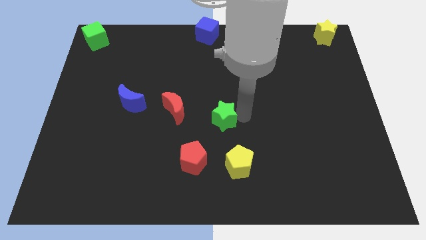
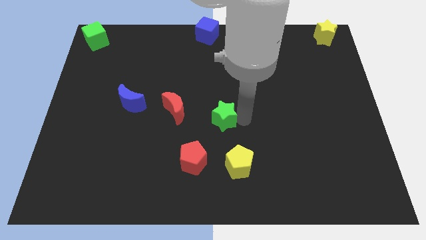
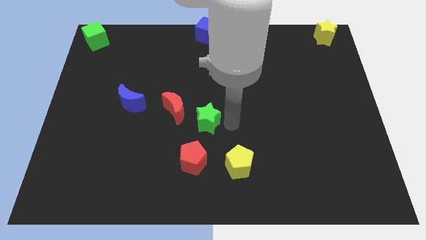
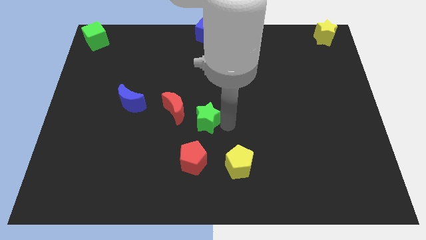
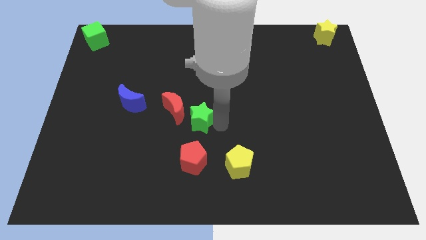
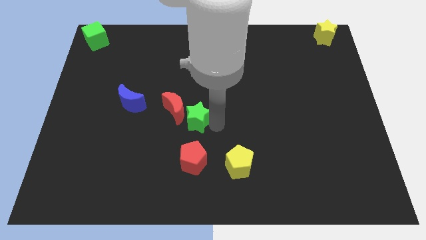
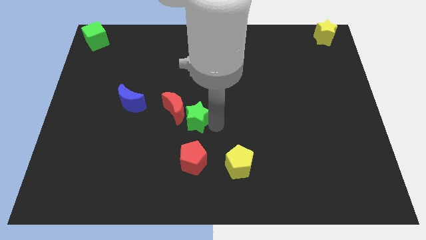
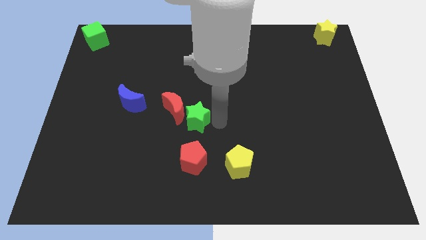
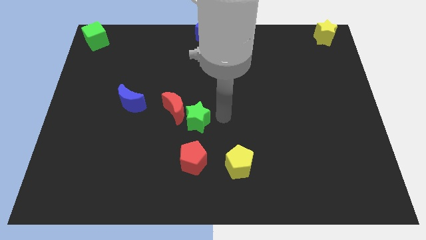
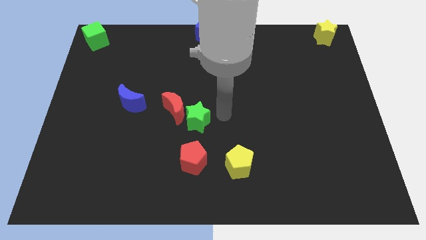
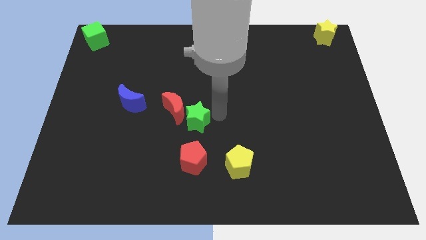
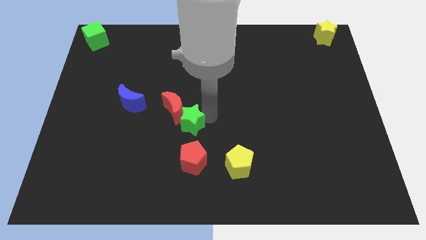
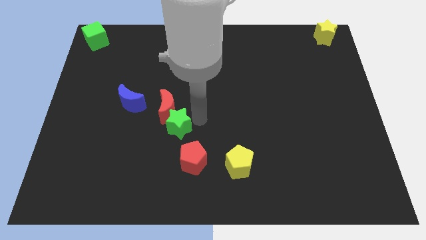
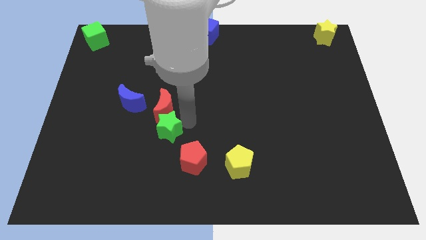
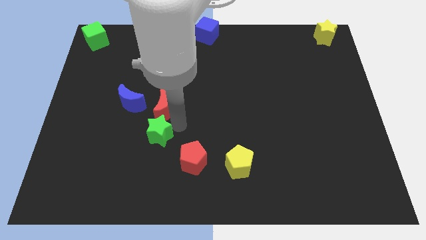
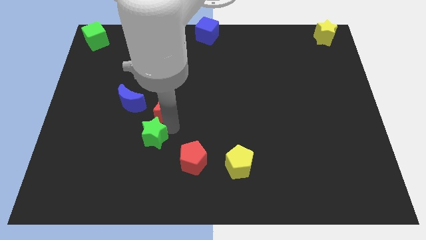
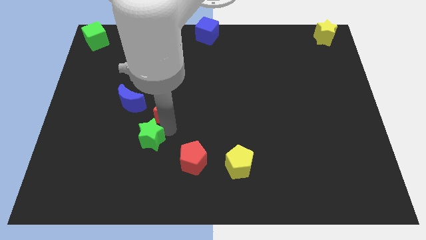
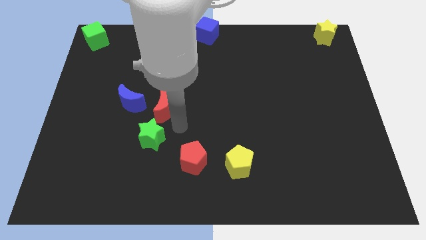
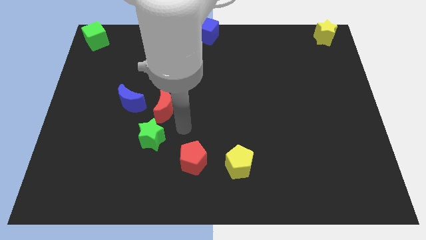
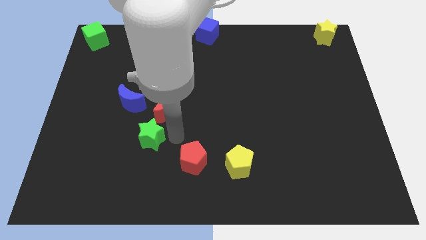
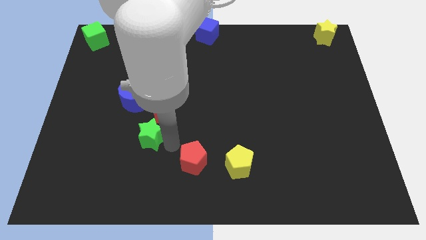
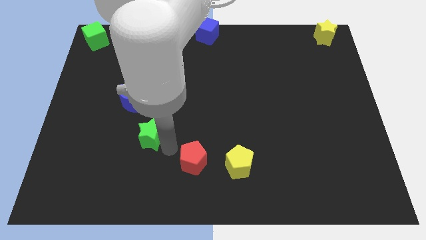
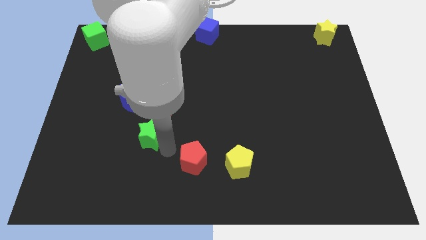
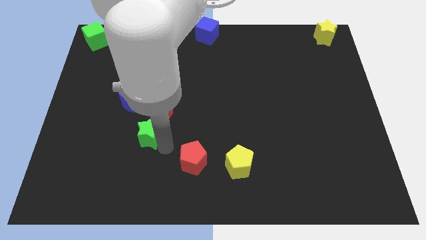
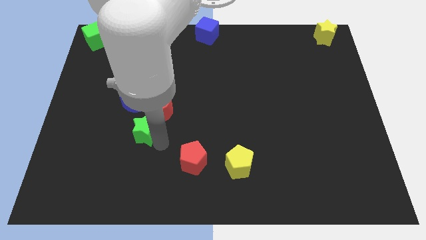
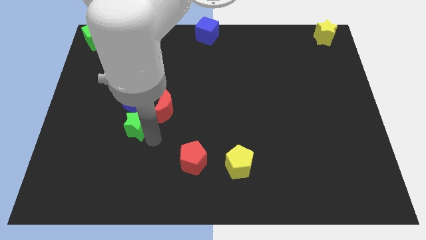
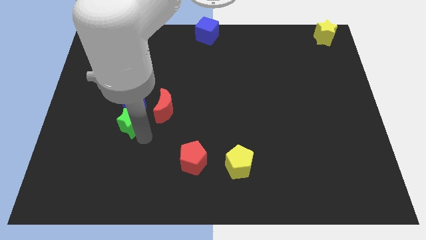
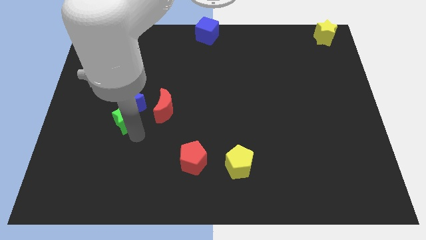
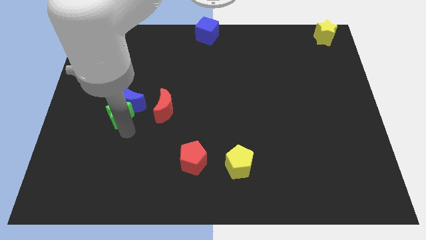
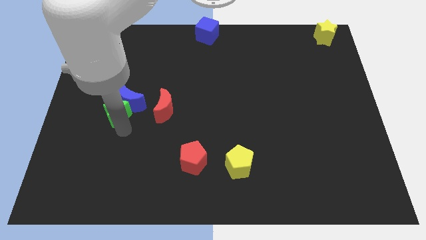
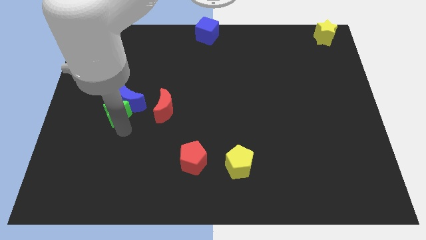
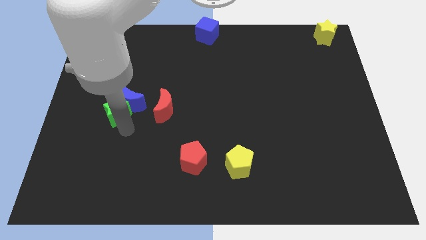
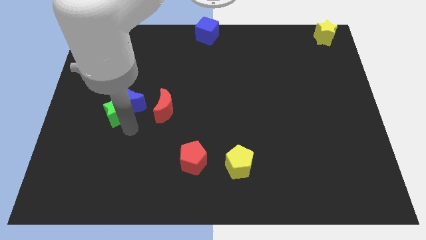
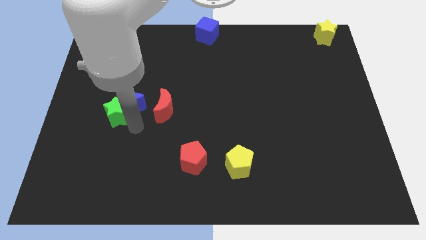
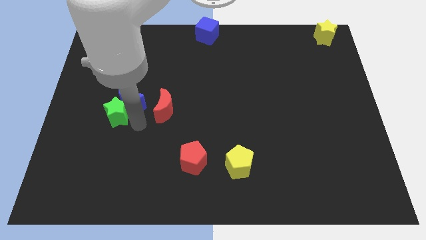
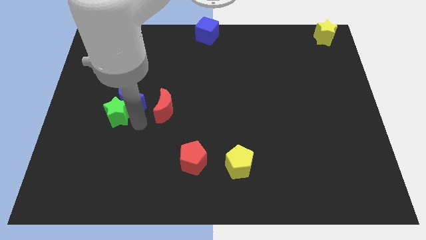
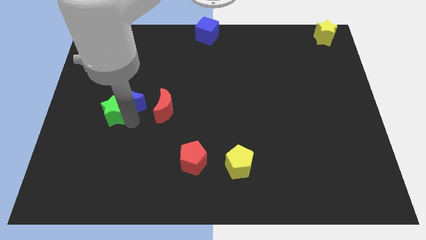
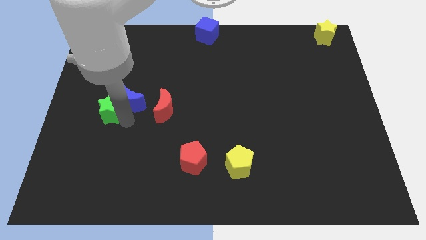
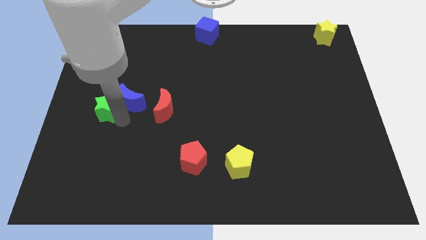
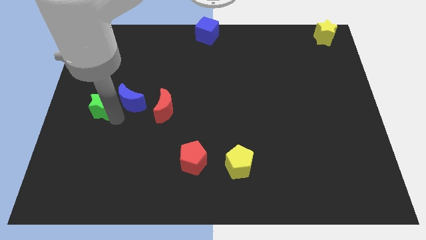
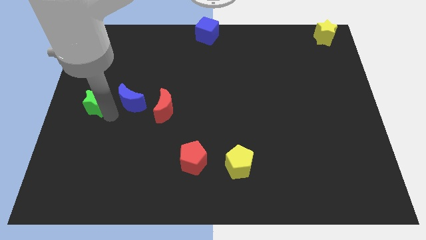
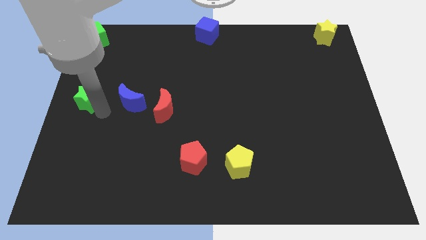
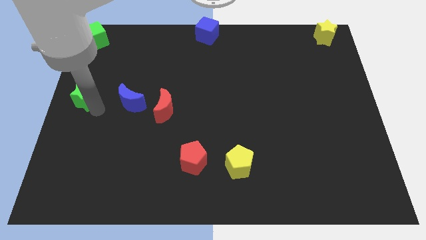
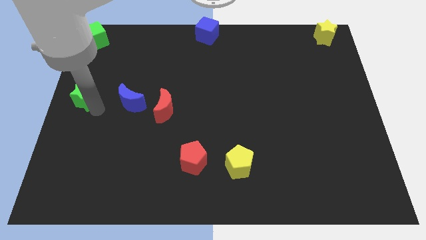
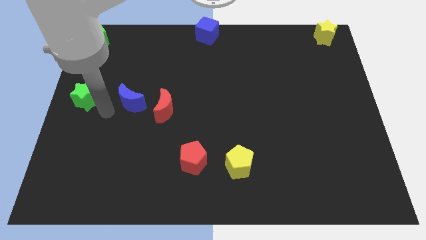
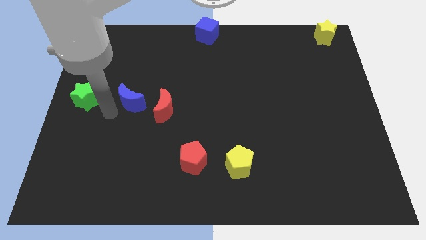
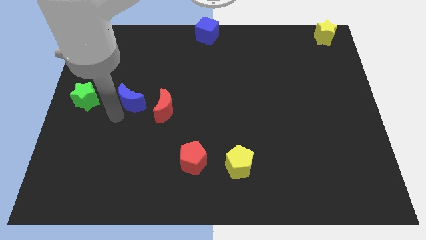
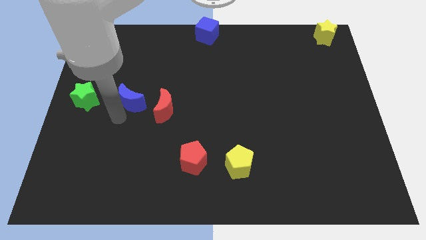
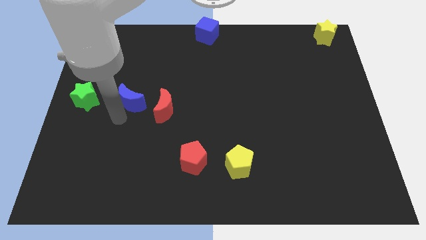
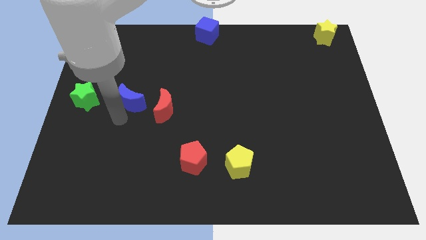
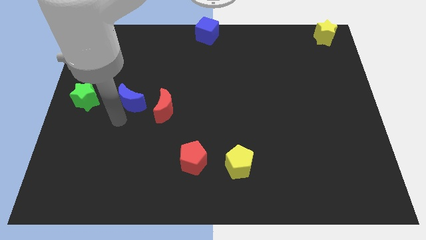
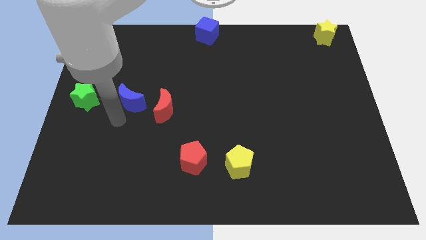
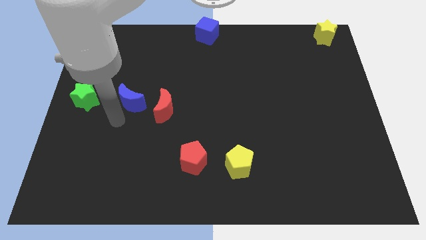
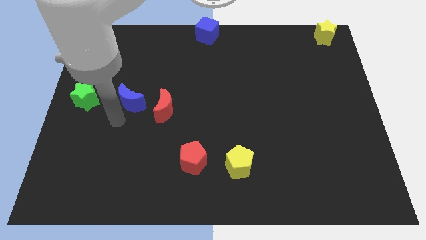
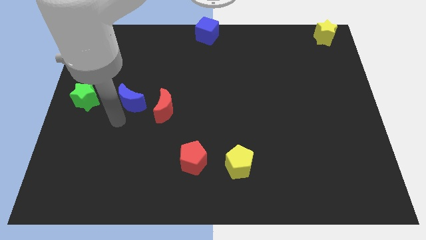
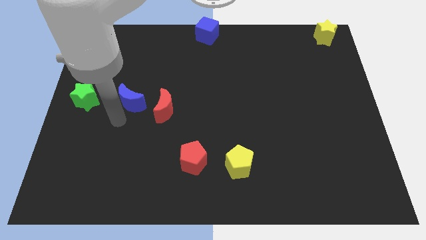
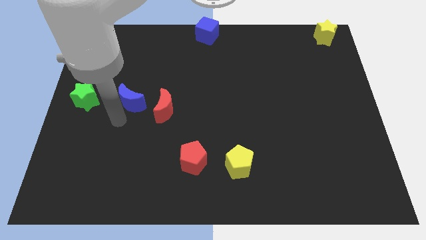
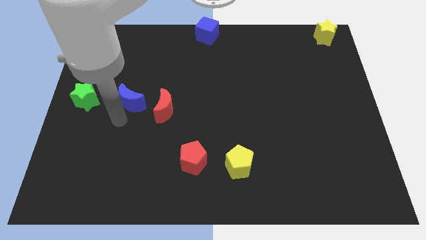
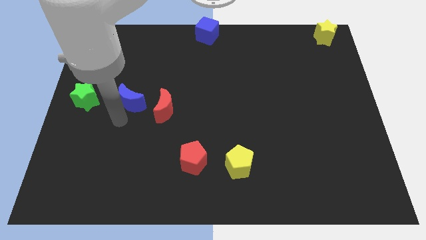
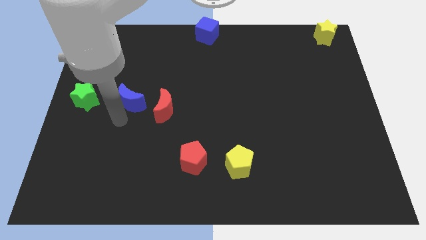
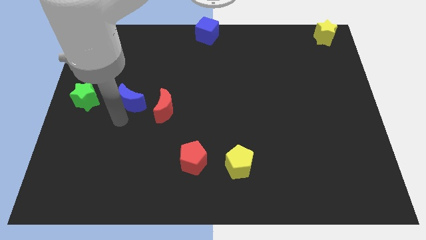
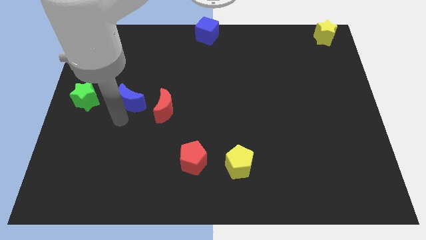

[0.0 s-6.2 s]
place the green star left to the blue moon

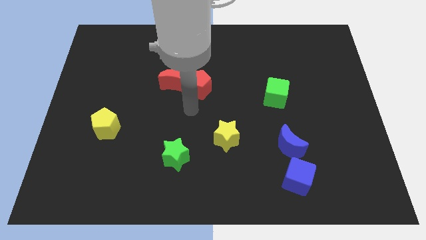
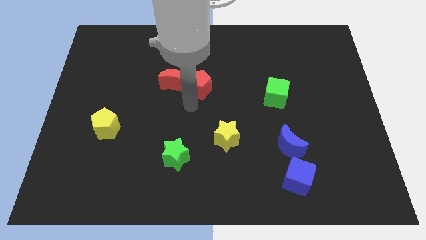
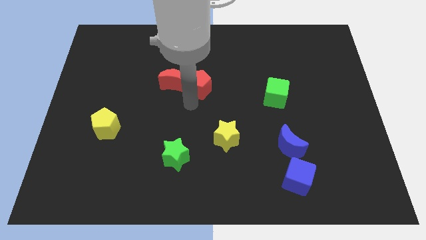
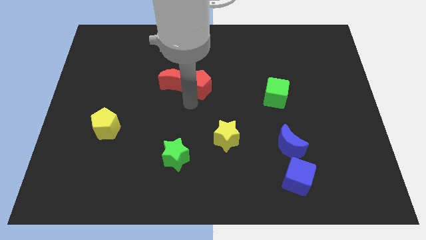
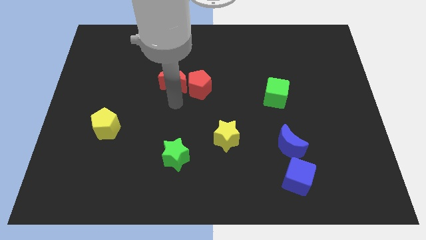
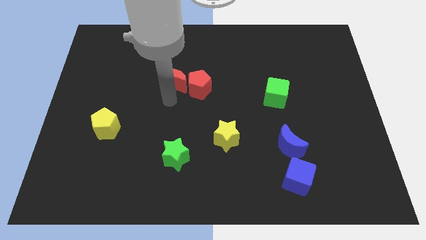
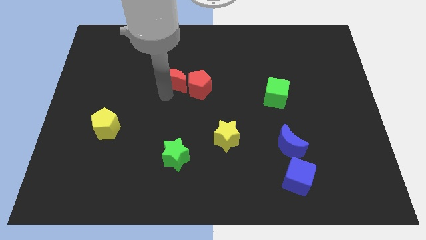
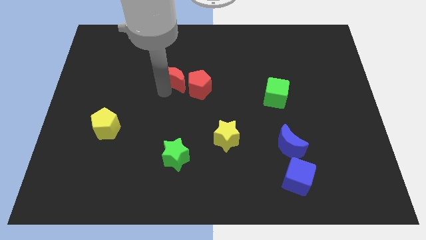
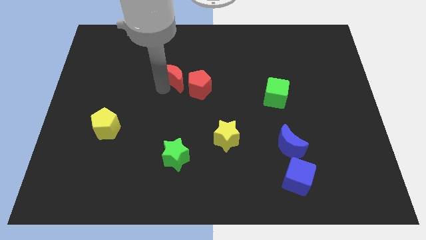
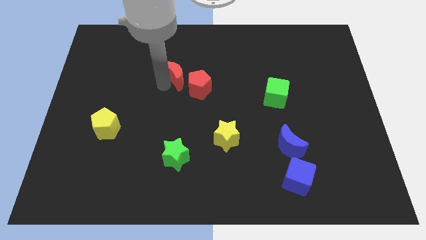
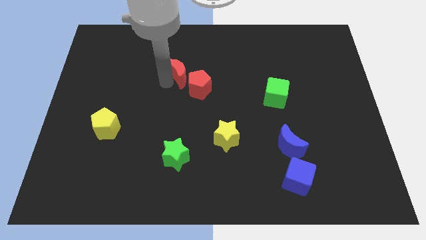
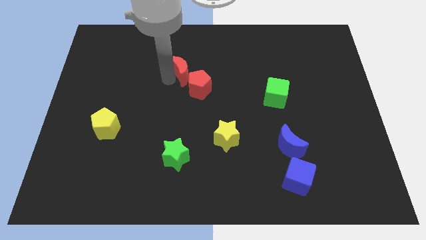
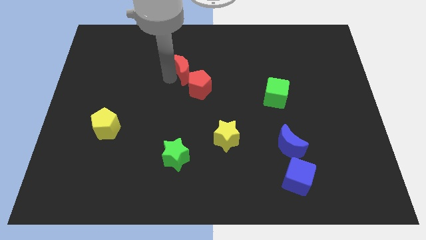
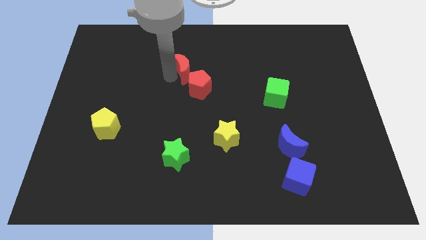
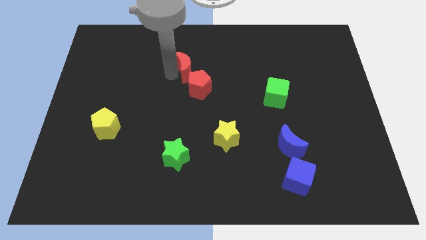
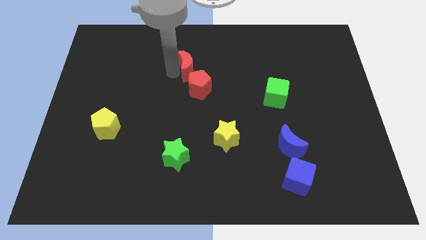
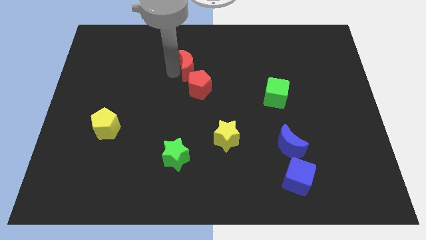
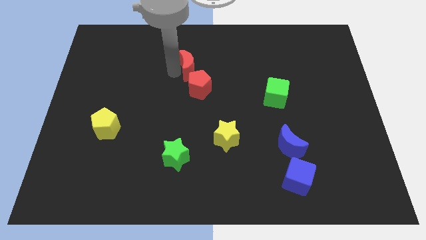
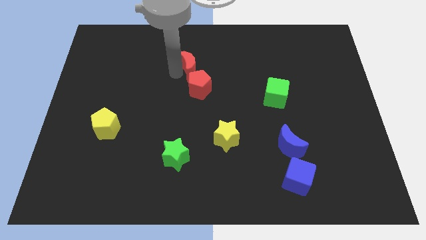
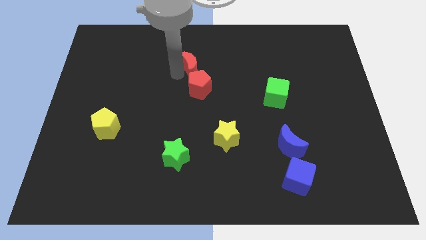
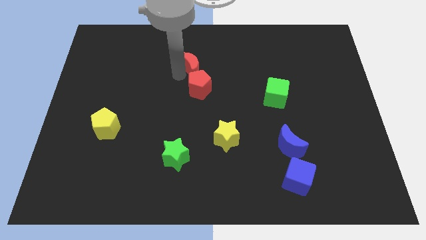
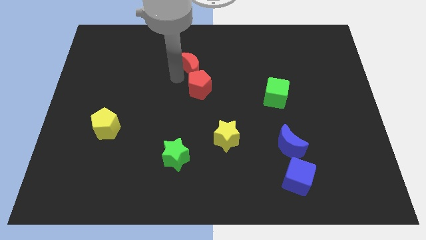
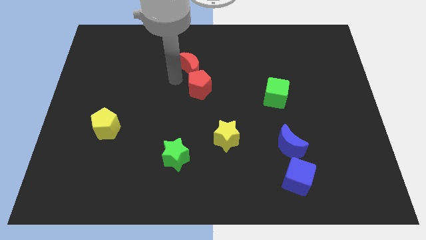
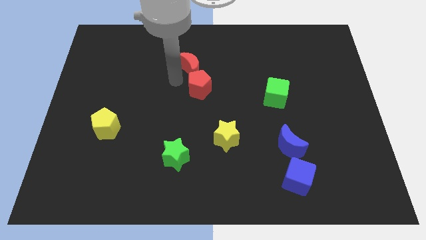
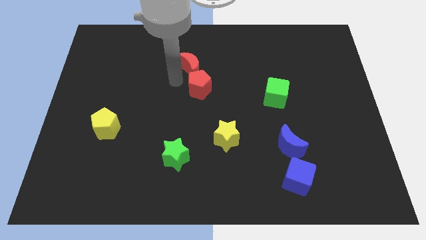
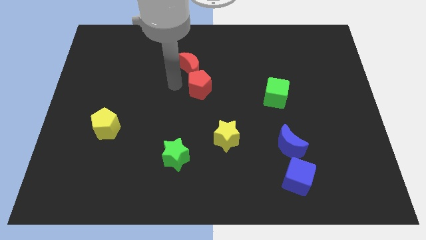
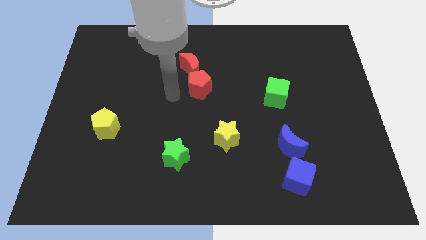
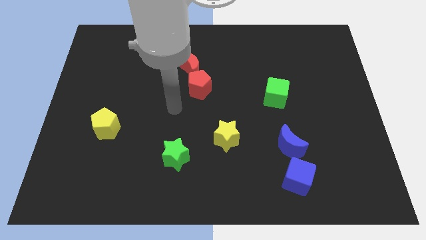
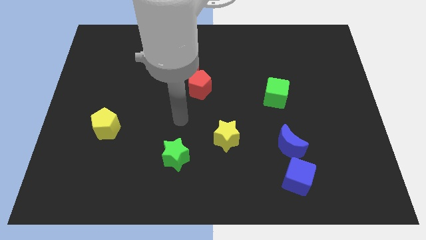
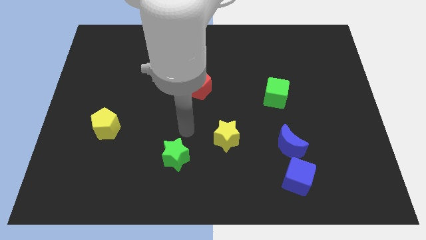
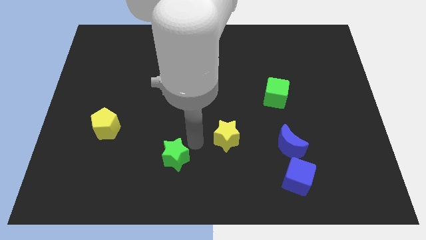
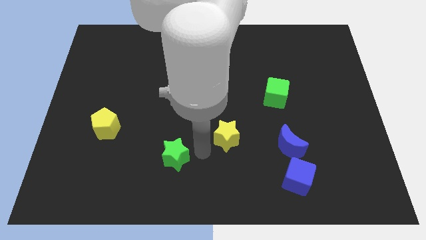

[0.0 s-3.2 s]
push the red moon towards the red pentagon
